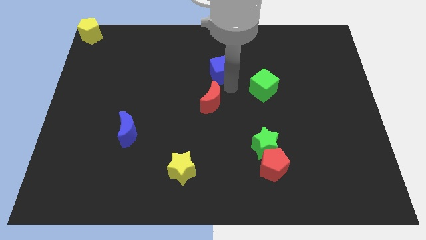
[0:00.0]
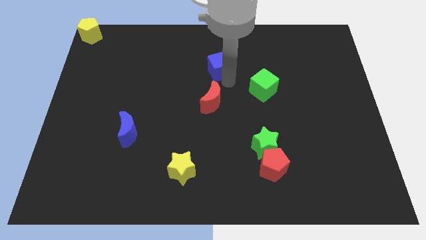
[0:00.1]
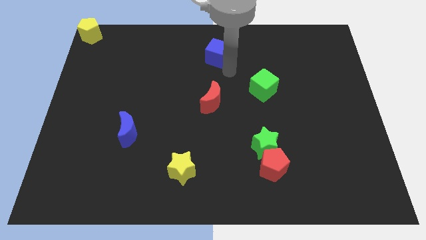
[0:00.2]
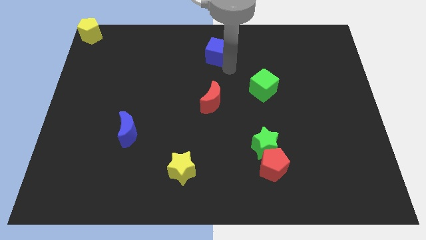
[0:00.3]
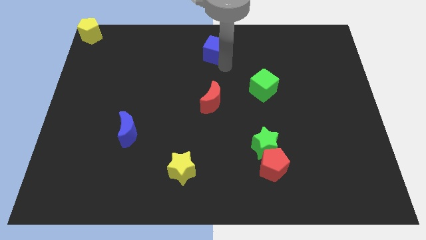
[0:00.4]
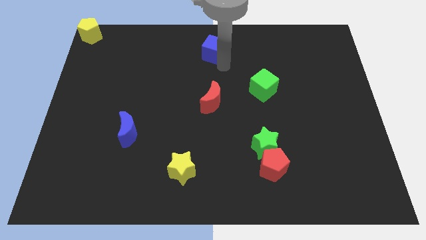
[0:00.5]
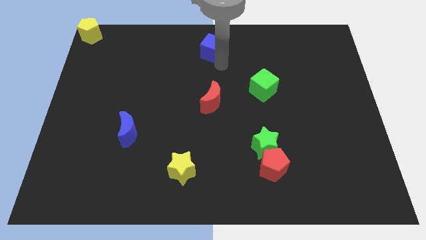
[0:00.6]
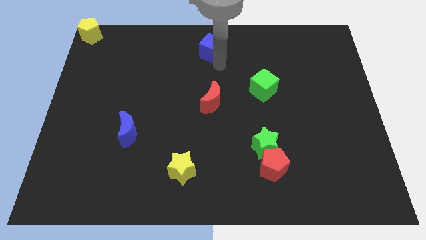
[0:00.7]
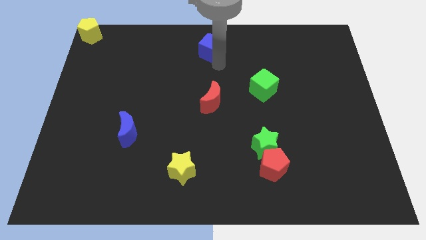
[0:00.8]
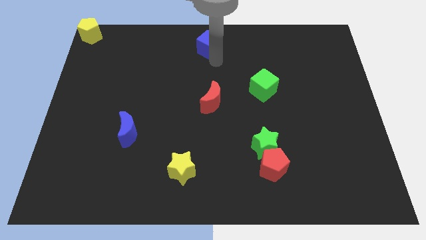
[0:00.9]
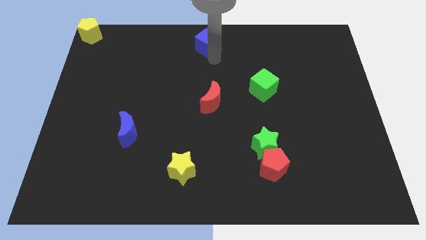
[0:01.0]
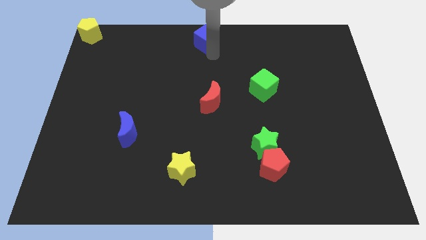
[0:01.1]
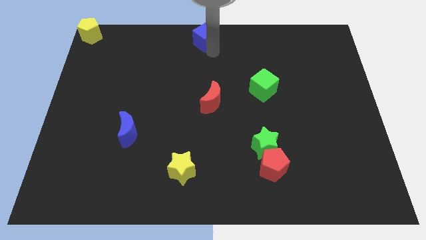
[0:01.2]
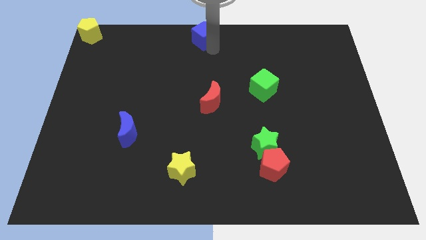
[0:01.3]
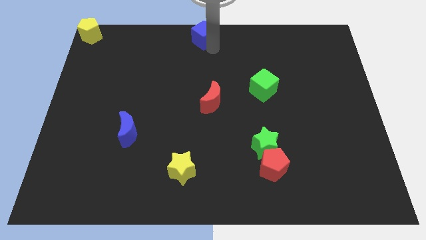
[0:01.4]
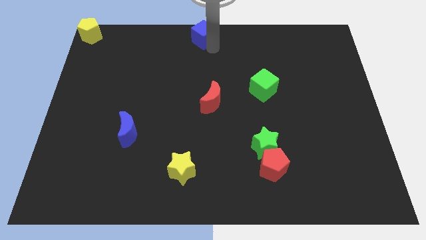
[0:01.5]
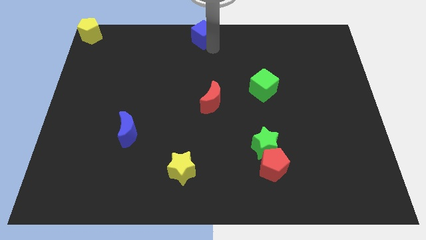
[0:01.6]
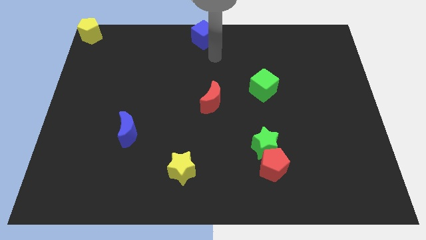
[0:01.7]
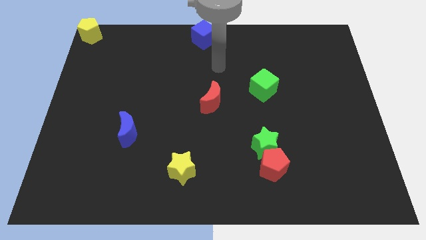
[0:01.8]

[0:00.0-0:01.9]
place the blue cube on the top middle of the board

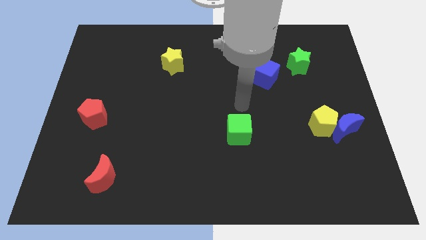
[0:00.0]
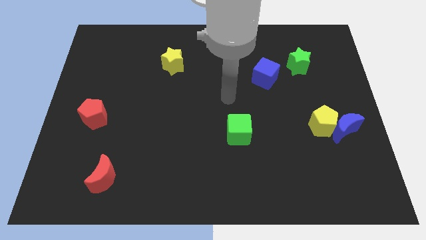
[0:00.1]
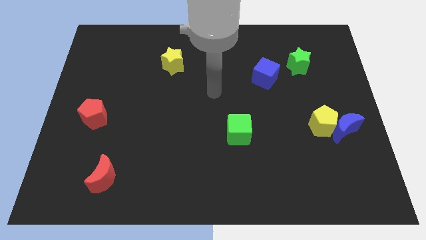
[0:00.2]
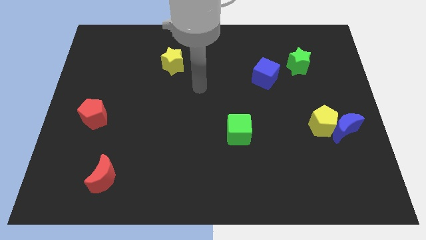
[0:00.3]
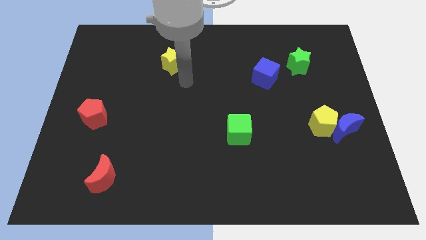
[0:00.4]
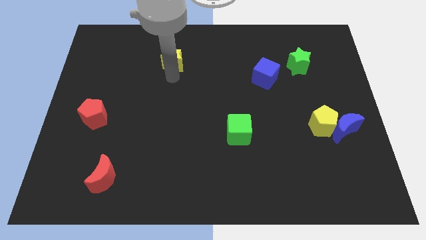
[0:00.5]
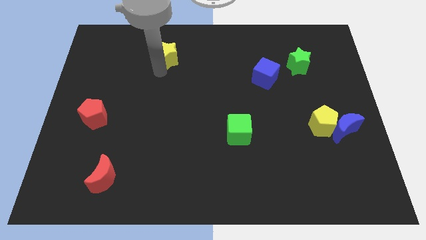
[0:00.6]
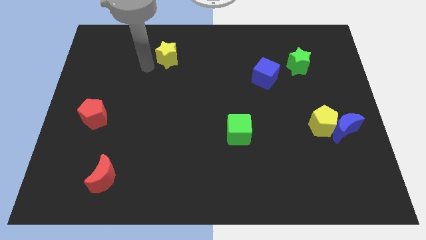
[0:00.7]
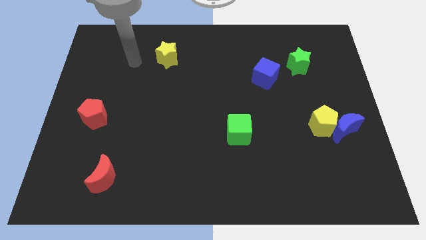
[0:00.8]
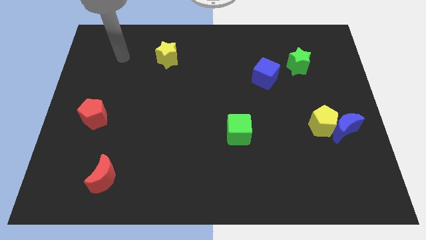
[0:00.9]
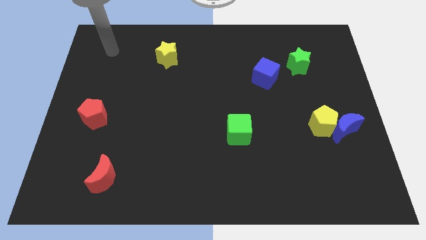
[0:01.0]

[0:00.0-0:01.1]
move your arm to the top left corner of the board

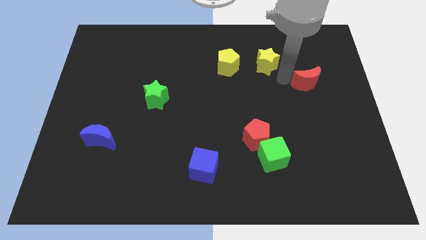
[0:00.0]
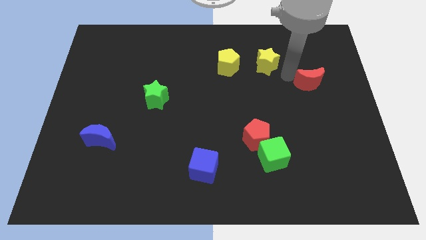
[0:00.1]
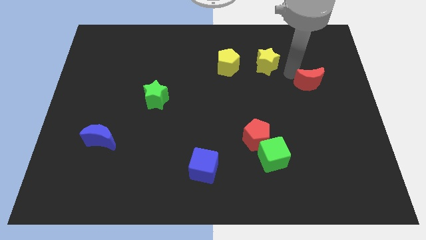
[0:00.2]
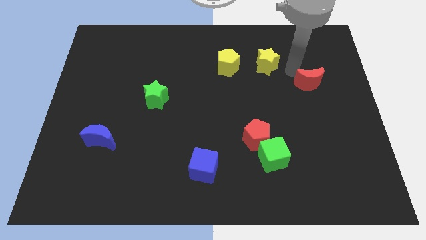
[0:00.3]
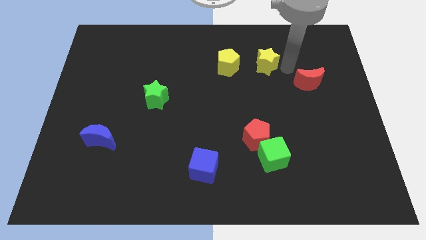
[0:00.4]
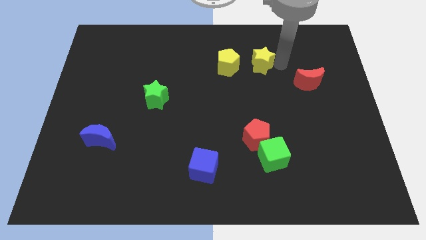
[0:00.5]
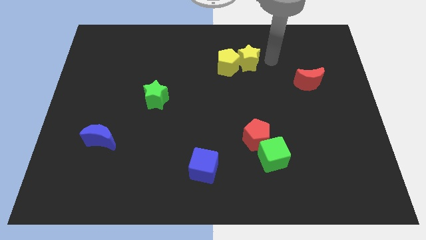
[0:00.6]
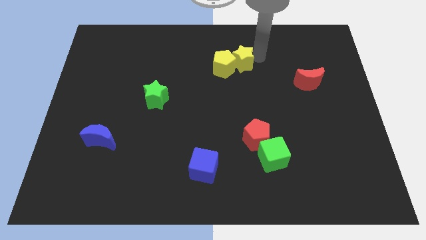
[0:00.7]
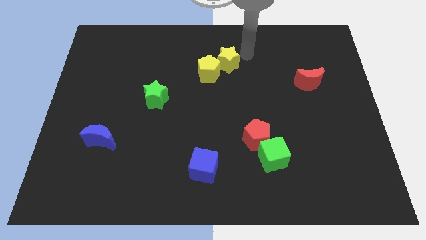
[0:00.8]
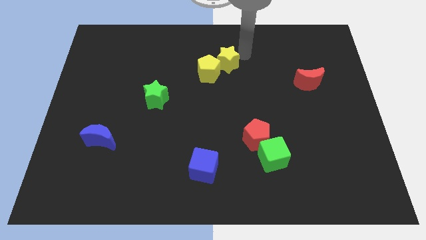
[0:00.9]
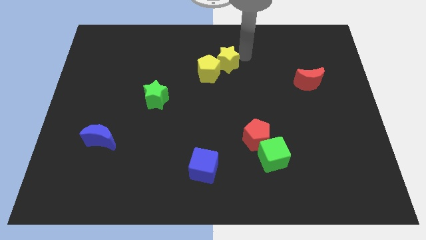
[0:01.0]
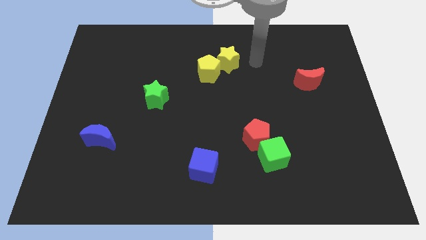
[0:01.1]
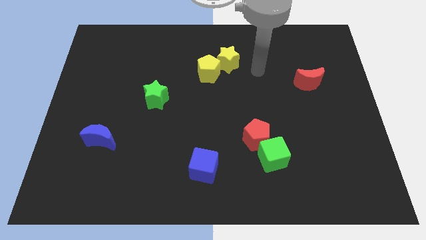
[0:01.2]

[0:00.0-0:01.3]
push the yellow star into the yellow pentagon

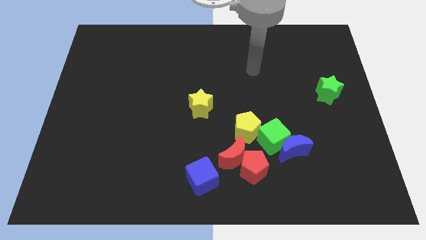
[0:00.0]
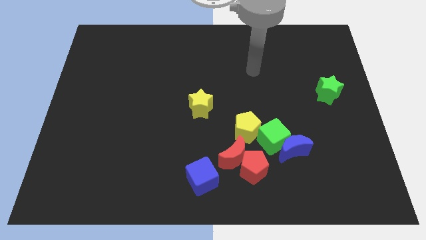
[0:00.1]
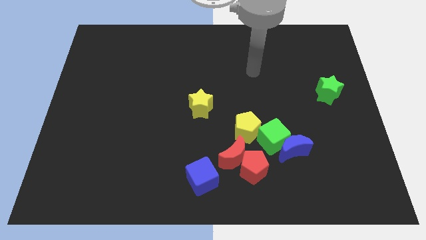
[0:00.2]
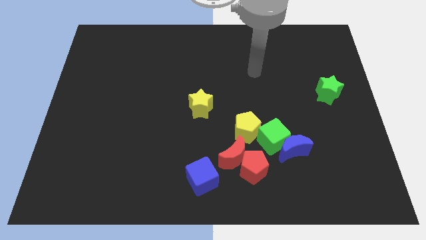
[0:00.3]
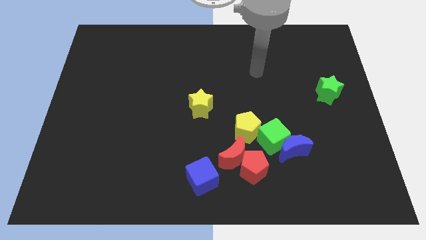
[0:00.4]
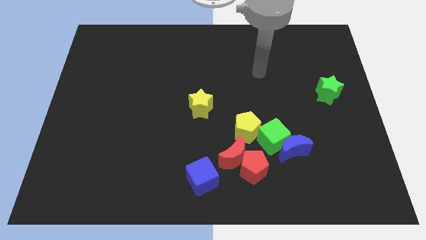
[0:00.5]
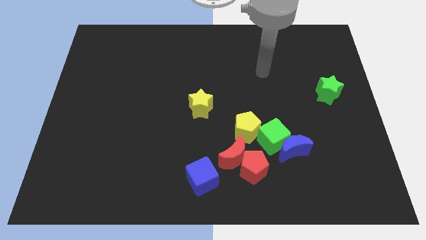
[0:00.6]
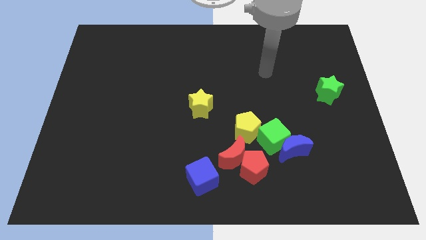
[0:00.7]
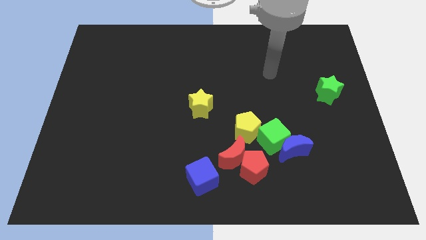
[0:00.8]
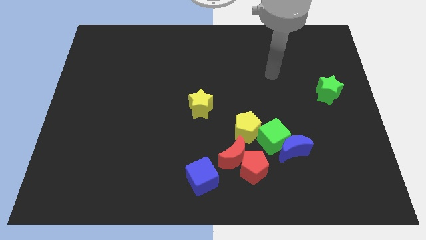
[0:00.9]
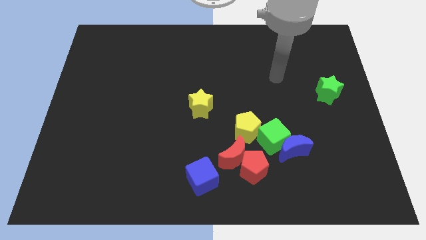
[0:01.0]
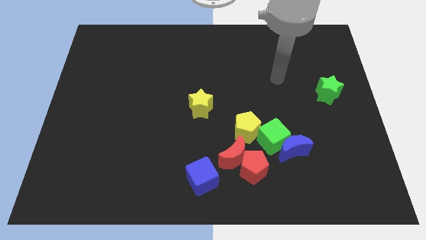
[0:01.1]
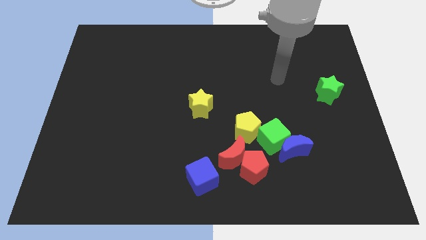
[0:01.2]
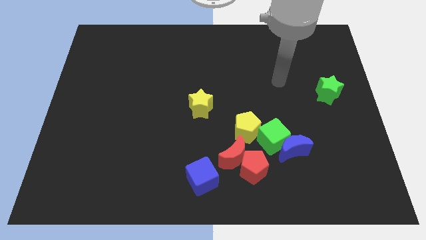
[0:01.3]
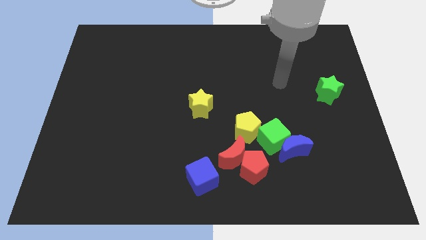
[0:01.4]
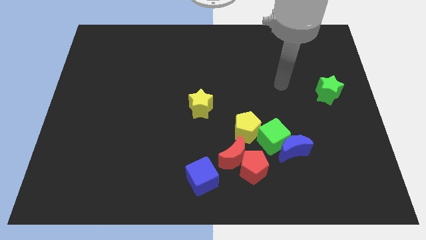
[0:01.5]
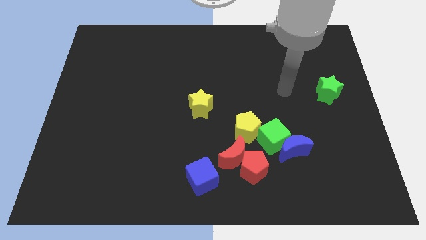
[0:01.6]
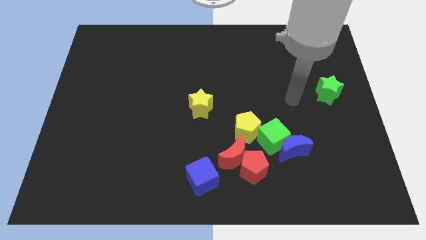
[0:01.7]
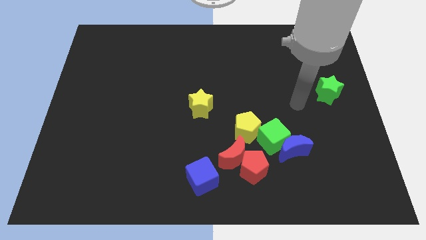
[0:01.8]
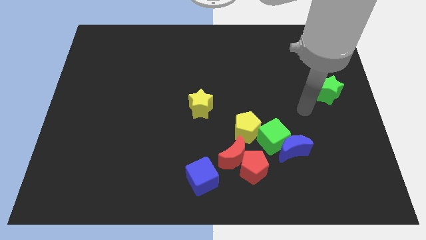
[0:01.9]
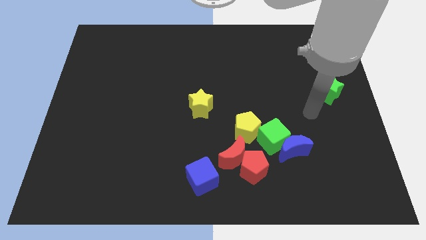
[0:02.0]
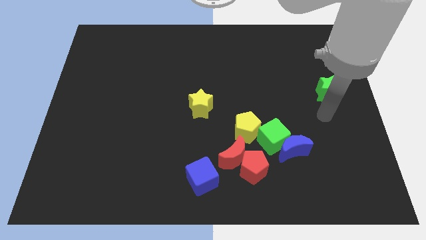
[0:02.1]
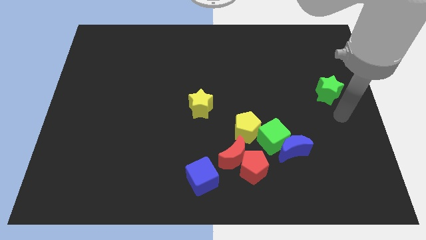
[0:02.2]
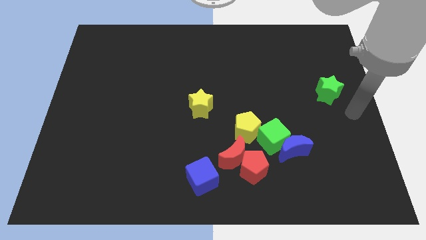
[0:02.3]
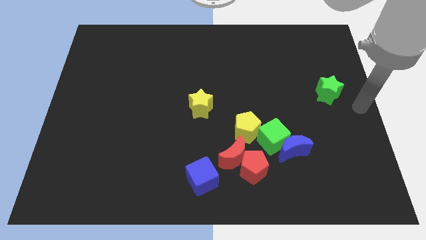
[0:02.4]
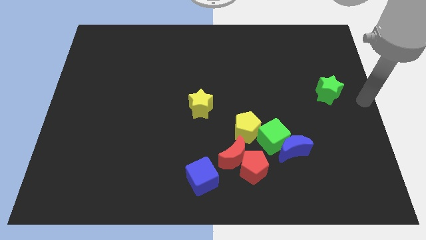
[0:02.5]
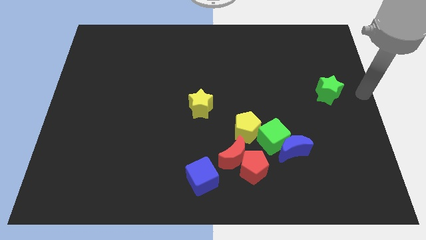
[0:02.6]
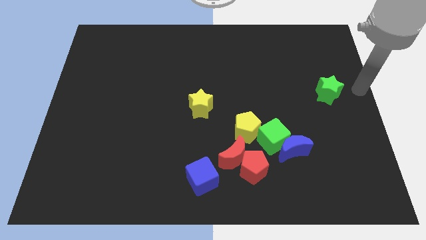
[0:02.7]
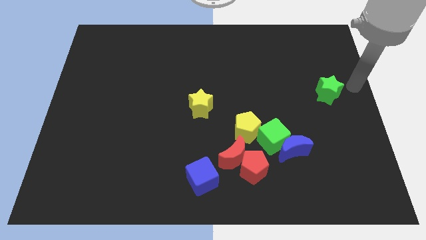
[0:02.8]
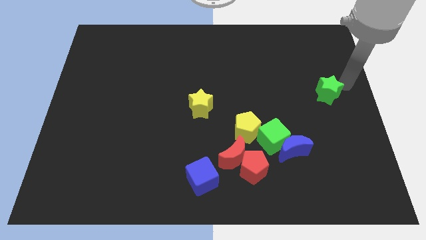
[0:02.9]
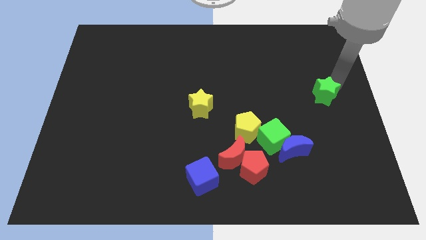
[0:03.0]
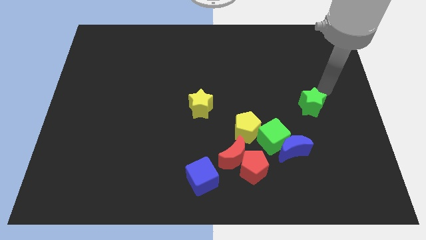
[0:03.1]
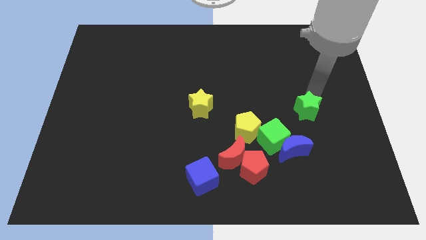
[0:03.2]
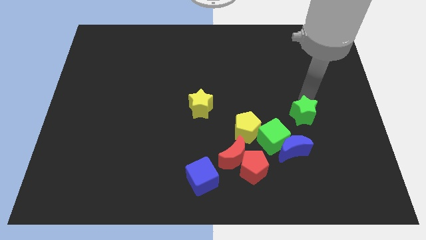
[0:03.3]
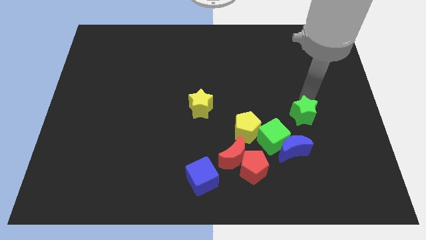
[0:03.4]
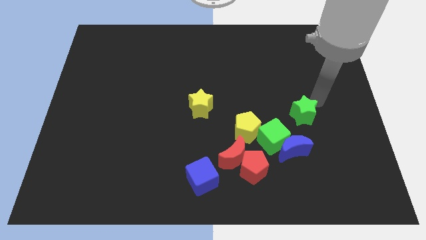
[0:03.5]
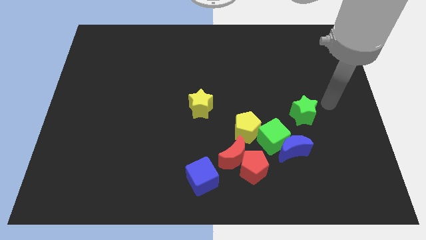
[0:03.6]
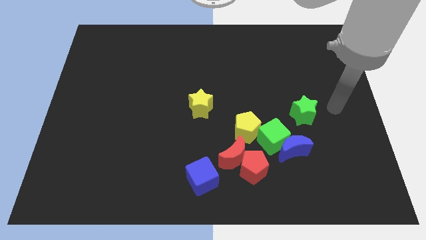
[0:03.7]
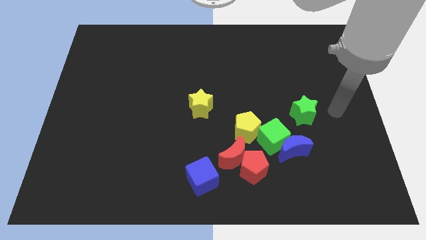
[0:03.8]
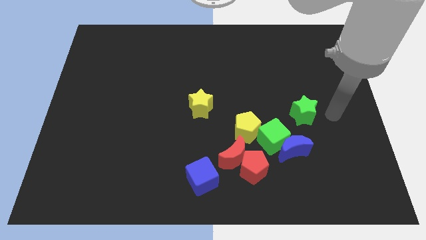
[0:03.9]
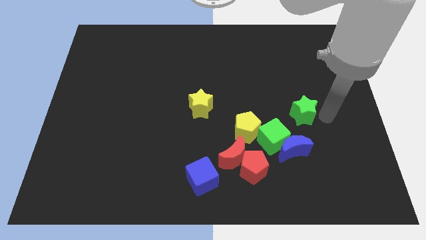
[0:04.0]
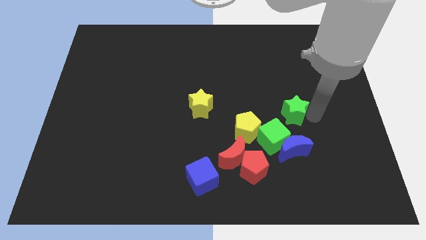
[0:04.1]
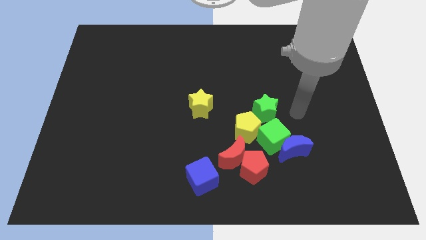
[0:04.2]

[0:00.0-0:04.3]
push the green star to the top right side of the green cube

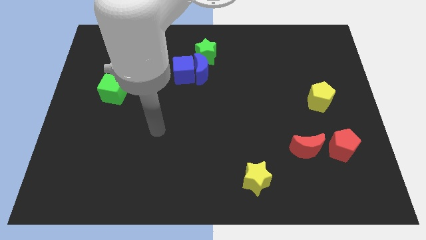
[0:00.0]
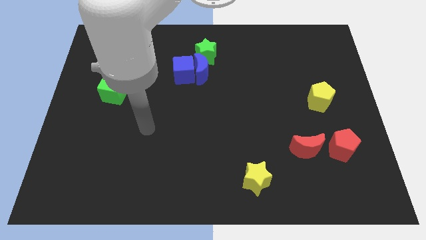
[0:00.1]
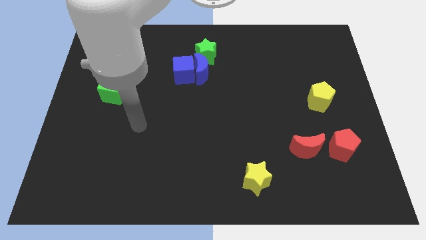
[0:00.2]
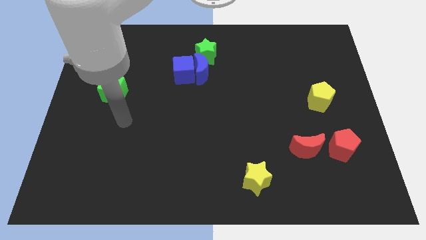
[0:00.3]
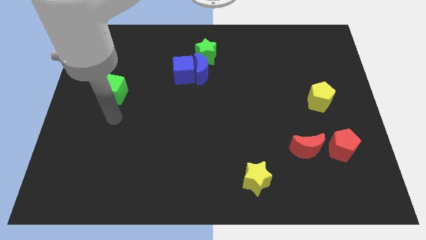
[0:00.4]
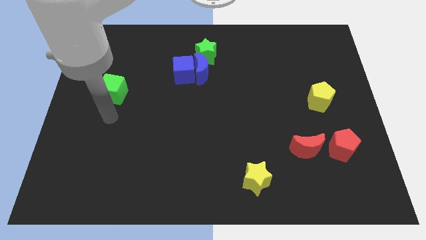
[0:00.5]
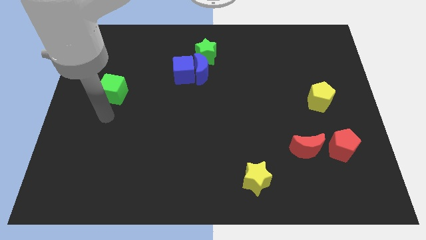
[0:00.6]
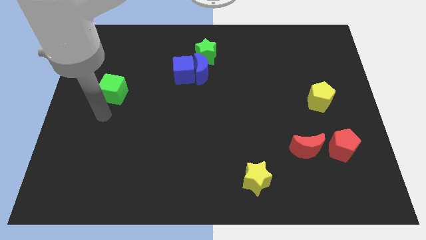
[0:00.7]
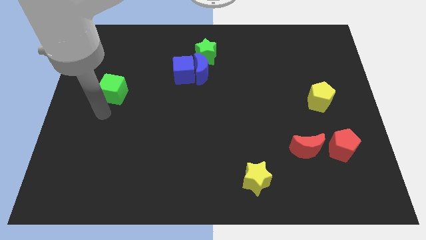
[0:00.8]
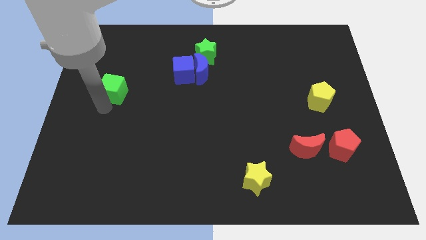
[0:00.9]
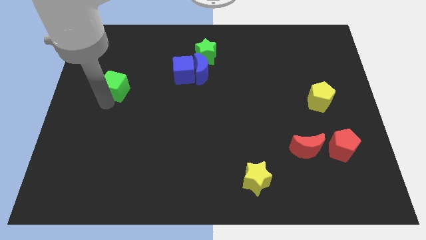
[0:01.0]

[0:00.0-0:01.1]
tap the bottom side of the green cube
